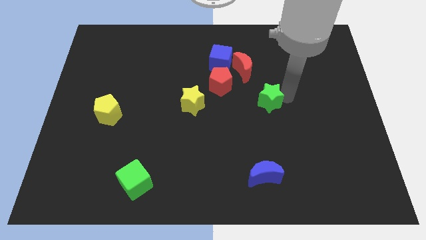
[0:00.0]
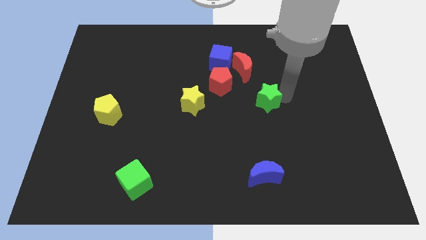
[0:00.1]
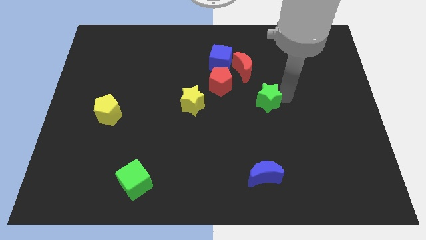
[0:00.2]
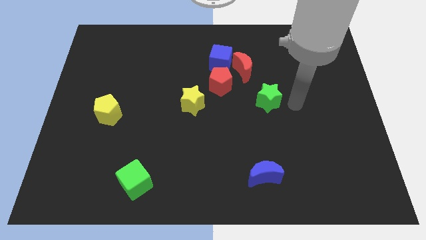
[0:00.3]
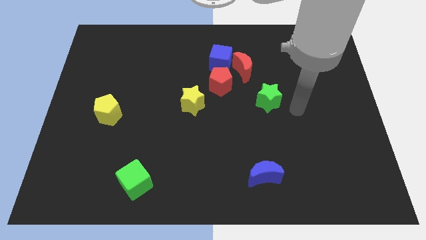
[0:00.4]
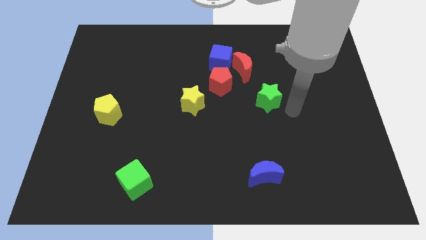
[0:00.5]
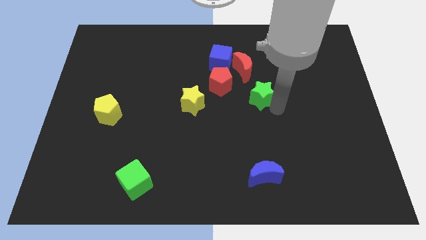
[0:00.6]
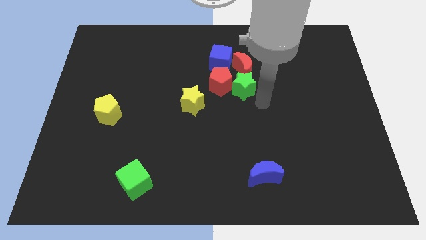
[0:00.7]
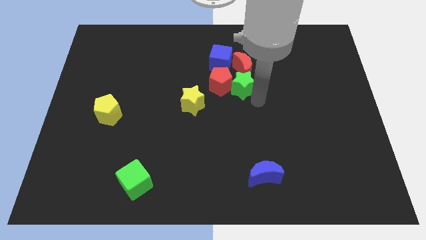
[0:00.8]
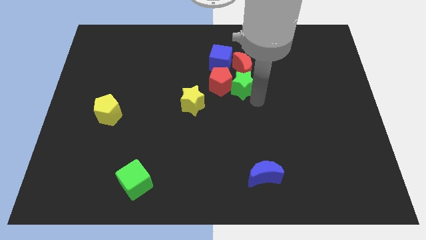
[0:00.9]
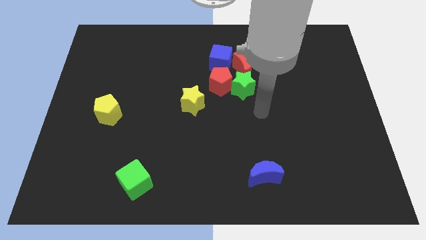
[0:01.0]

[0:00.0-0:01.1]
put the green star at the bottom of the red moon

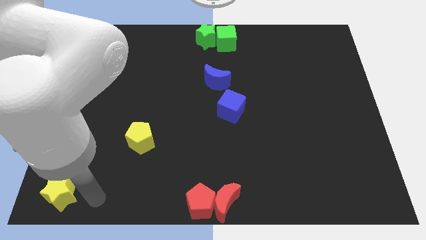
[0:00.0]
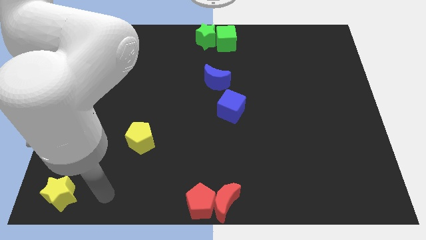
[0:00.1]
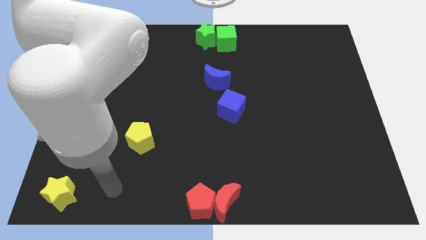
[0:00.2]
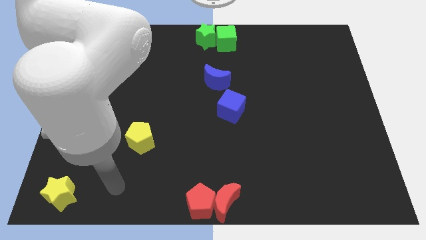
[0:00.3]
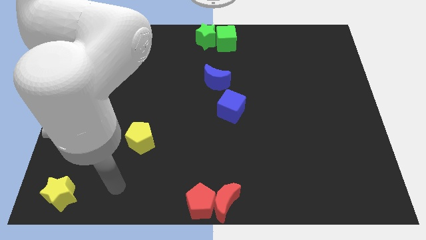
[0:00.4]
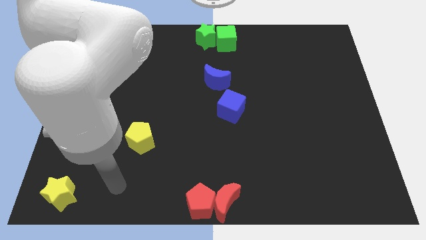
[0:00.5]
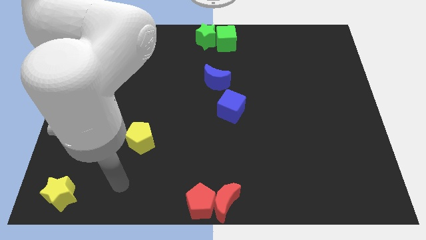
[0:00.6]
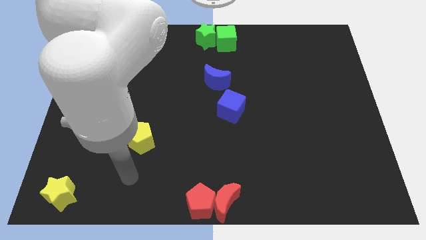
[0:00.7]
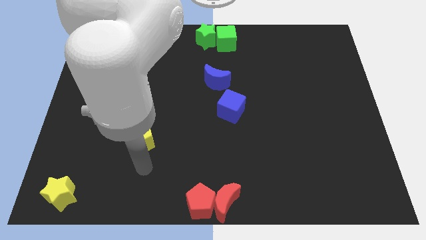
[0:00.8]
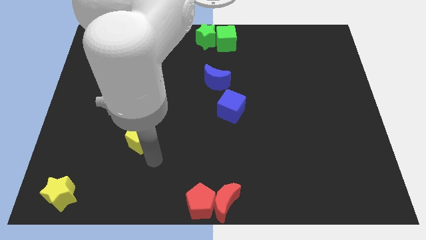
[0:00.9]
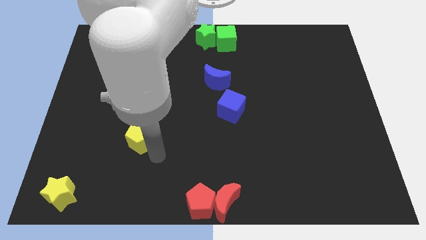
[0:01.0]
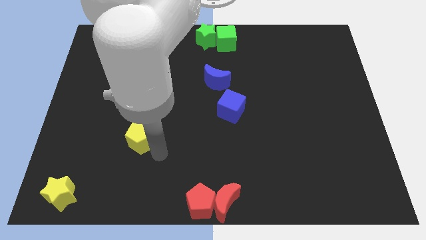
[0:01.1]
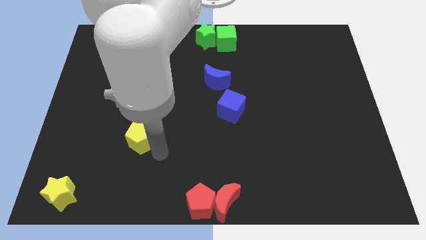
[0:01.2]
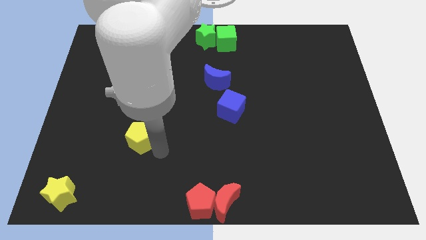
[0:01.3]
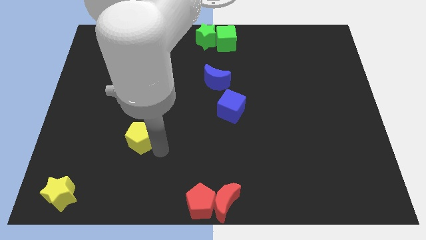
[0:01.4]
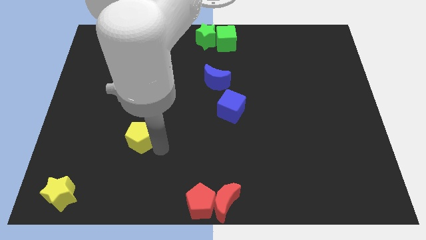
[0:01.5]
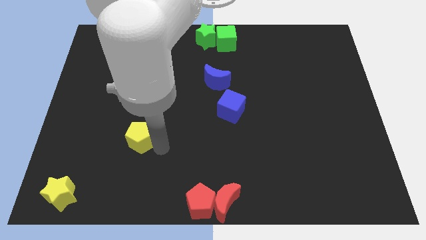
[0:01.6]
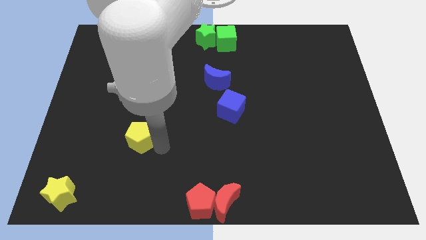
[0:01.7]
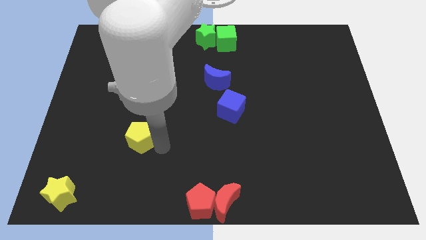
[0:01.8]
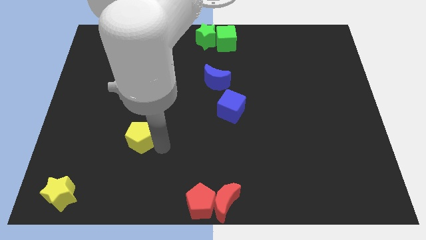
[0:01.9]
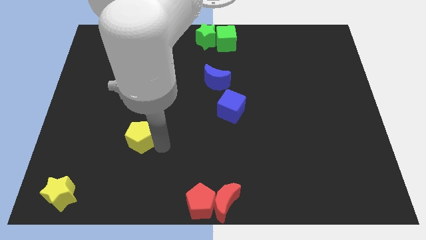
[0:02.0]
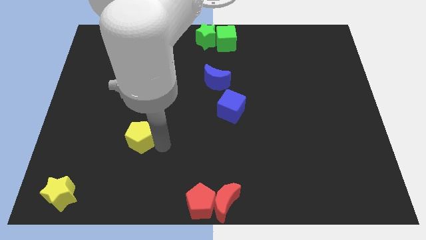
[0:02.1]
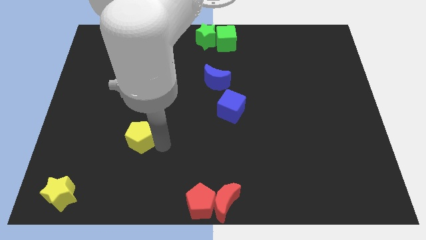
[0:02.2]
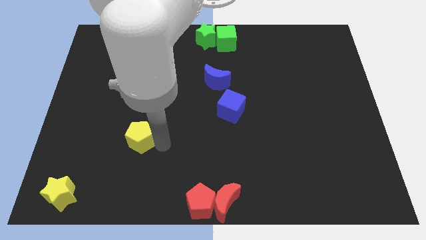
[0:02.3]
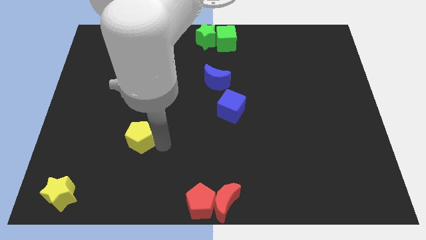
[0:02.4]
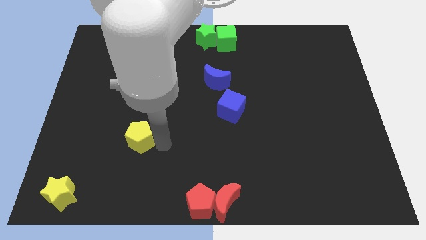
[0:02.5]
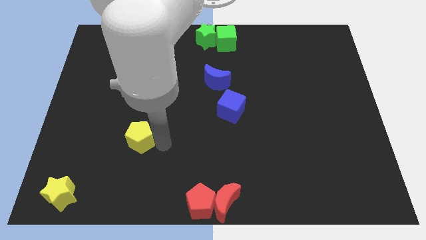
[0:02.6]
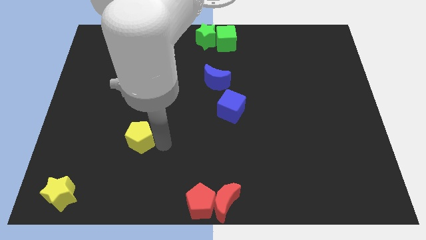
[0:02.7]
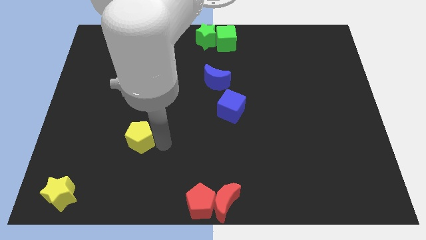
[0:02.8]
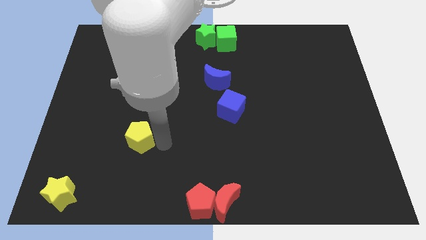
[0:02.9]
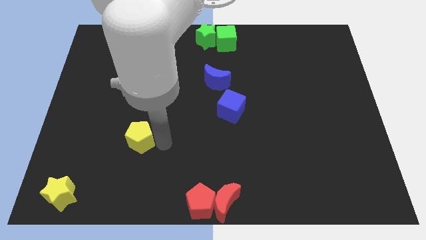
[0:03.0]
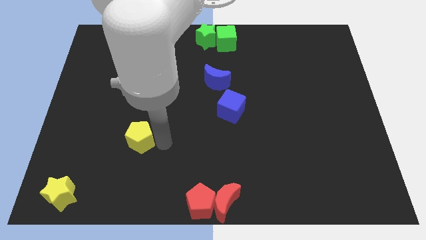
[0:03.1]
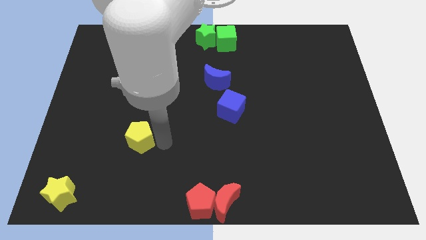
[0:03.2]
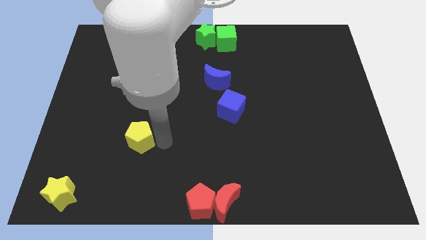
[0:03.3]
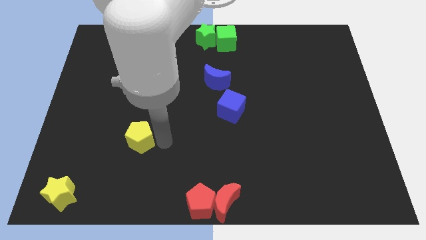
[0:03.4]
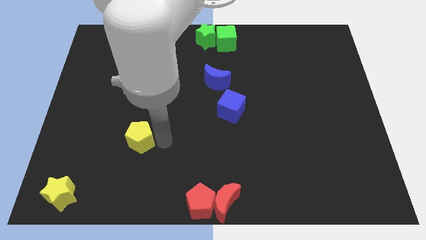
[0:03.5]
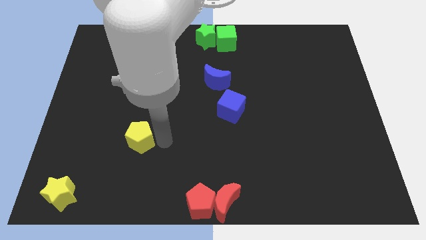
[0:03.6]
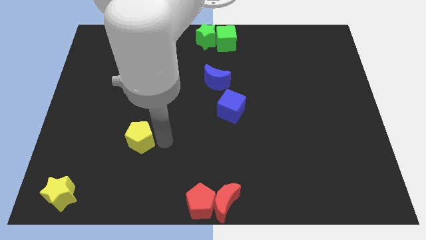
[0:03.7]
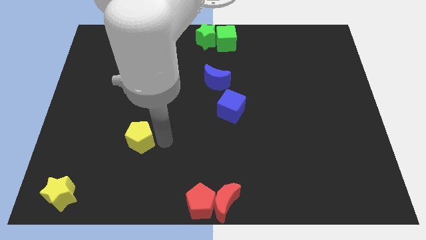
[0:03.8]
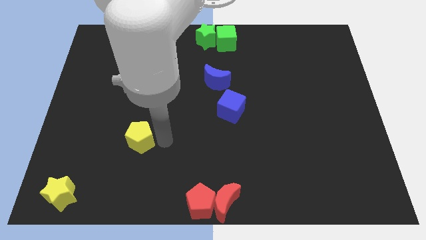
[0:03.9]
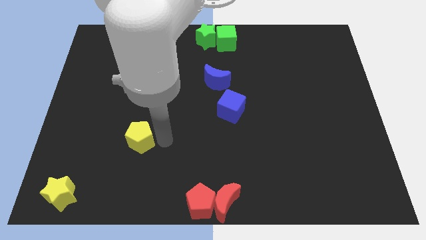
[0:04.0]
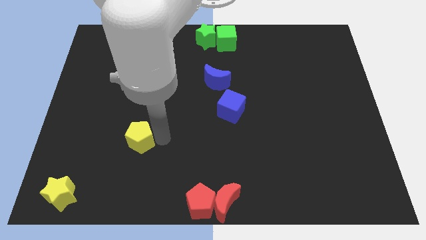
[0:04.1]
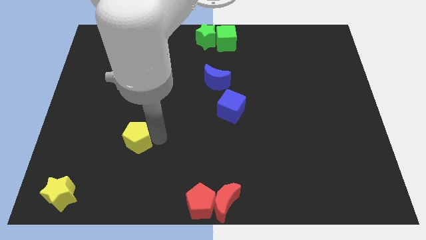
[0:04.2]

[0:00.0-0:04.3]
move your arm to the yellow pentagon

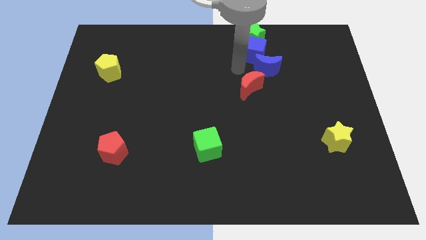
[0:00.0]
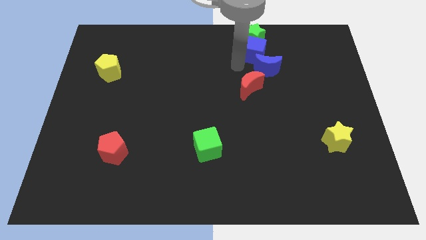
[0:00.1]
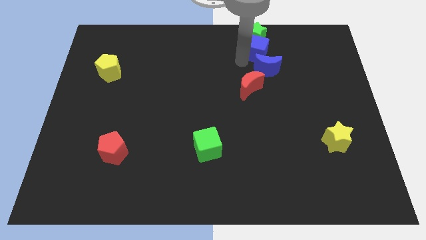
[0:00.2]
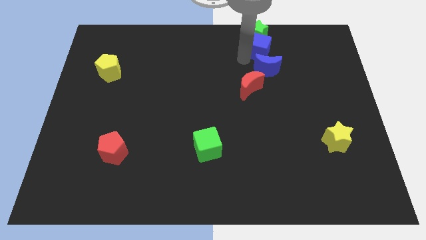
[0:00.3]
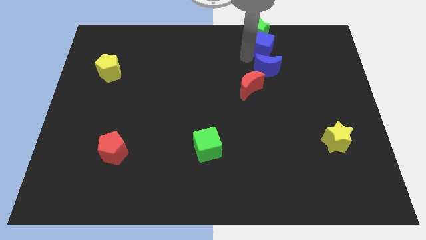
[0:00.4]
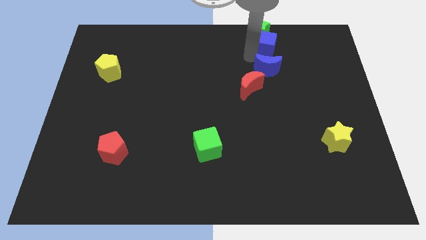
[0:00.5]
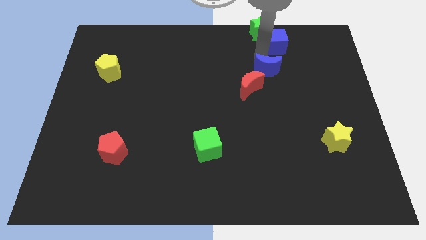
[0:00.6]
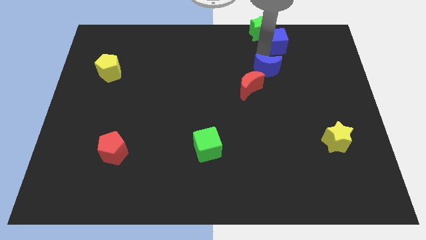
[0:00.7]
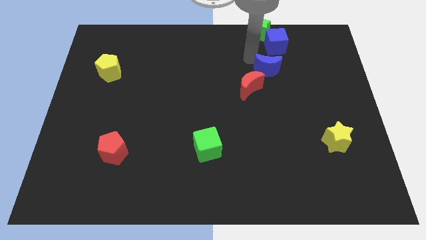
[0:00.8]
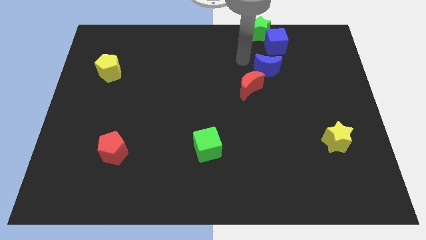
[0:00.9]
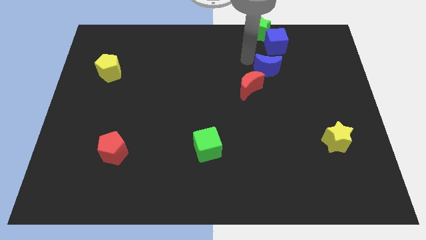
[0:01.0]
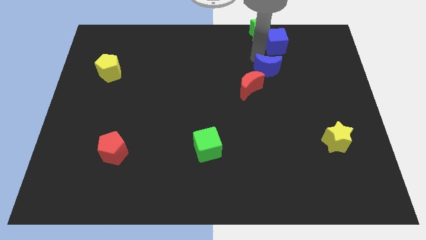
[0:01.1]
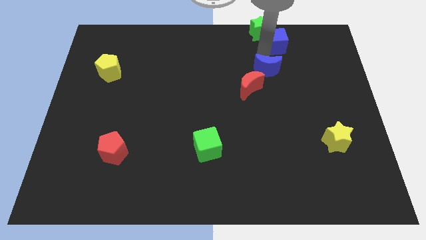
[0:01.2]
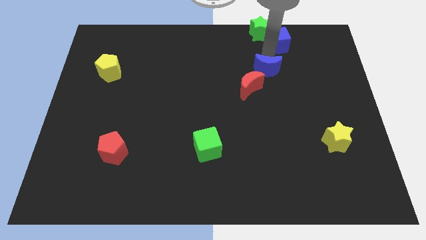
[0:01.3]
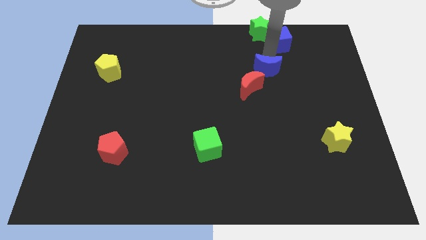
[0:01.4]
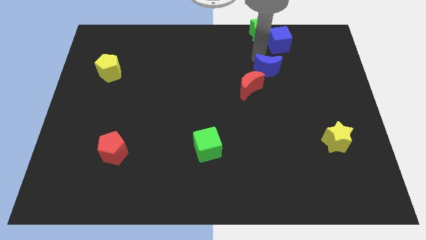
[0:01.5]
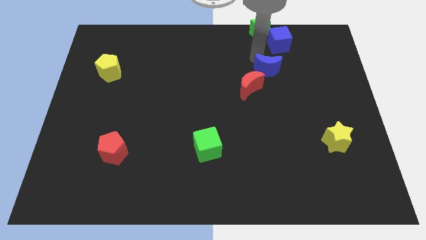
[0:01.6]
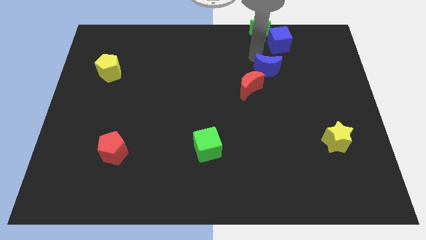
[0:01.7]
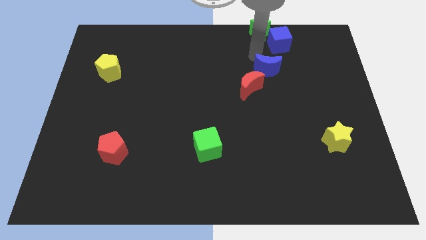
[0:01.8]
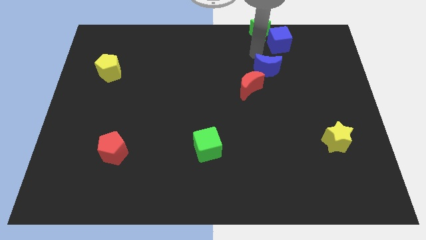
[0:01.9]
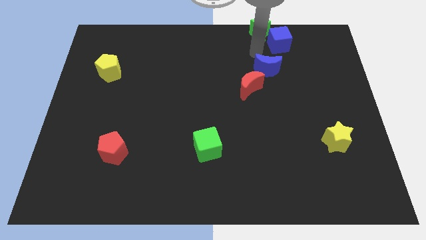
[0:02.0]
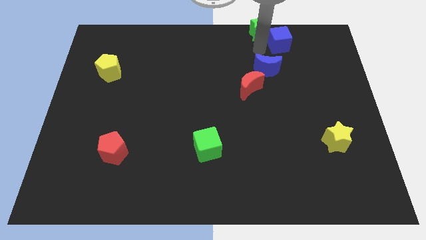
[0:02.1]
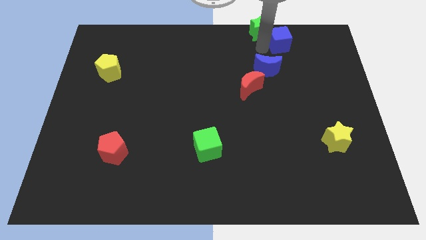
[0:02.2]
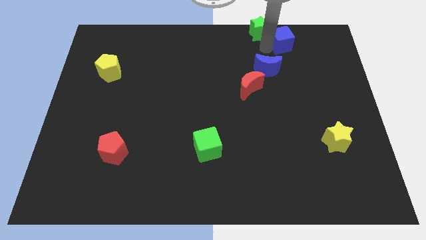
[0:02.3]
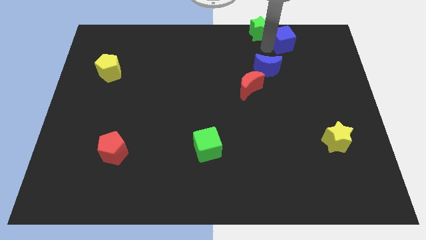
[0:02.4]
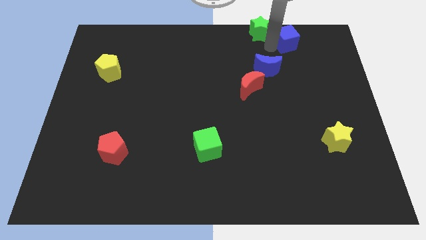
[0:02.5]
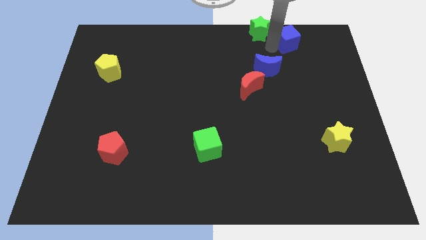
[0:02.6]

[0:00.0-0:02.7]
push the blue cube and green star towards top

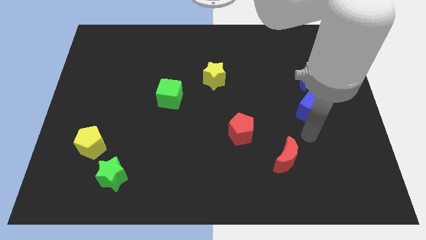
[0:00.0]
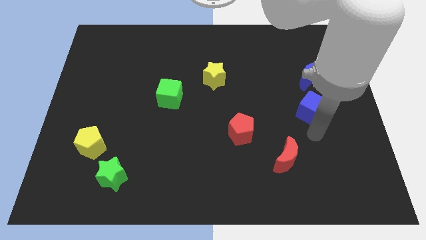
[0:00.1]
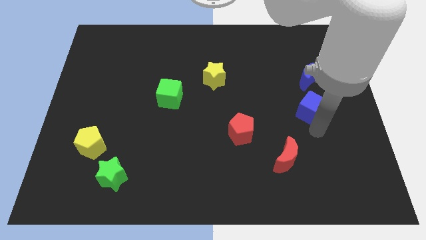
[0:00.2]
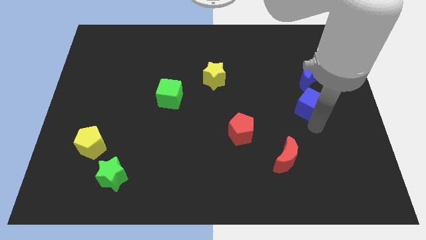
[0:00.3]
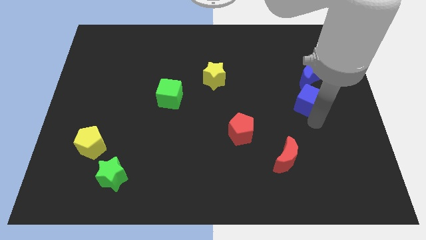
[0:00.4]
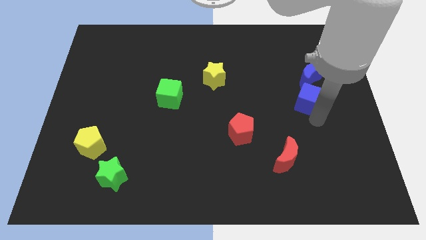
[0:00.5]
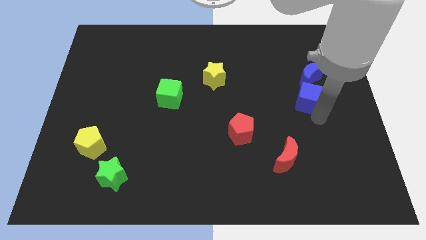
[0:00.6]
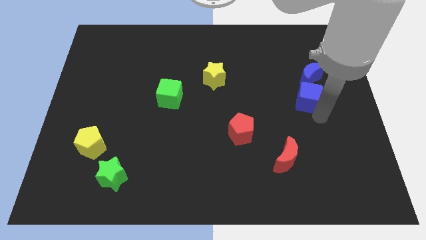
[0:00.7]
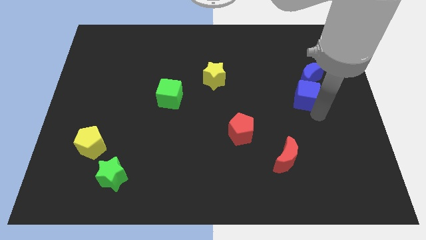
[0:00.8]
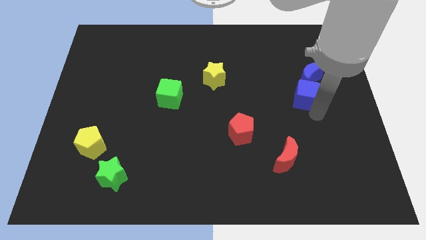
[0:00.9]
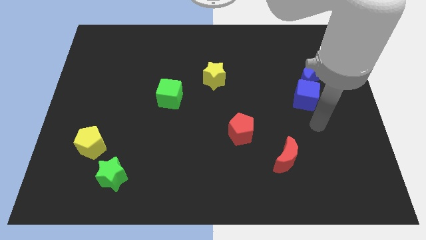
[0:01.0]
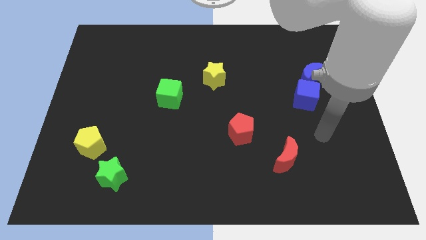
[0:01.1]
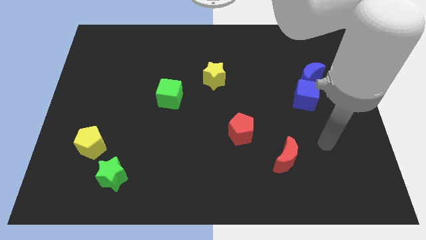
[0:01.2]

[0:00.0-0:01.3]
move the blue cube towards the blue crescent
